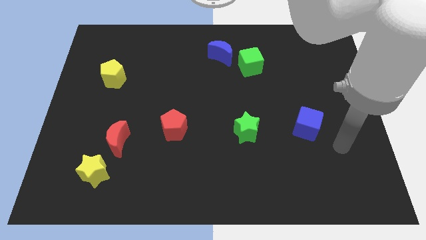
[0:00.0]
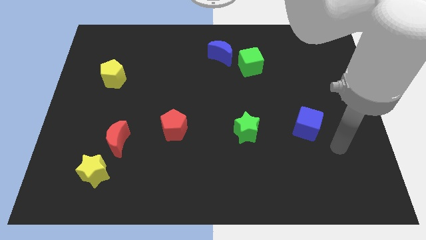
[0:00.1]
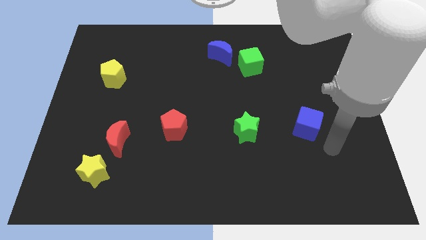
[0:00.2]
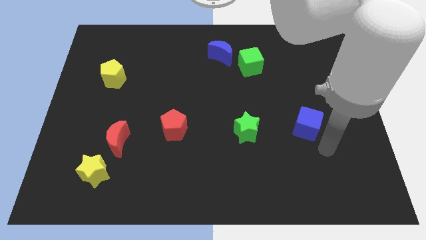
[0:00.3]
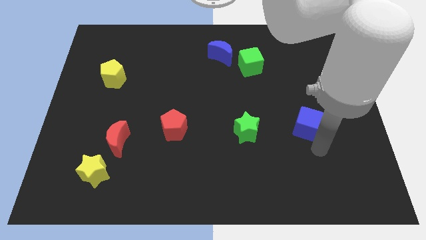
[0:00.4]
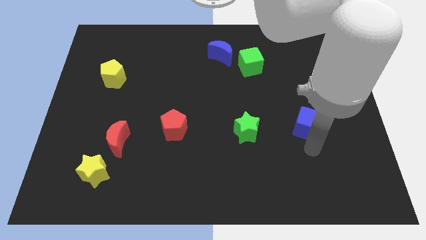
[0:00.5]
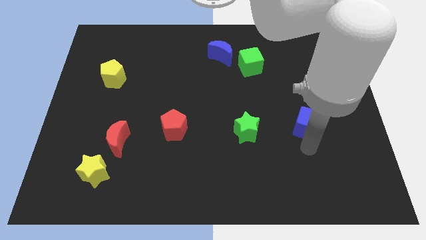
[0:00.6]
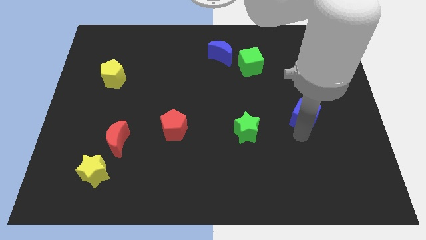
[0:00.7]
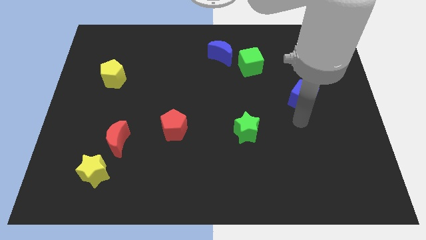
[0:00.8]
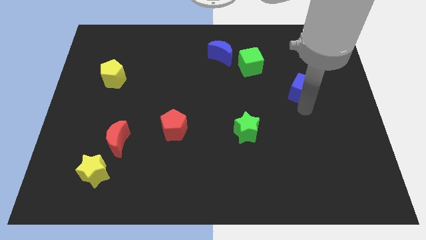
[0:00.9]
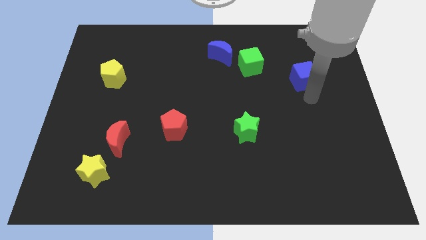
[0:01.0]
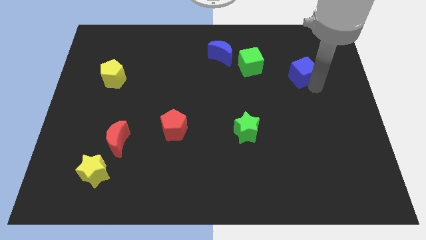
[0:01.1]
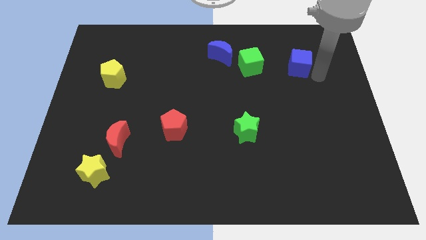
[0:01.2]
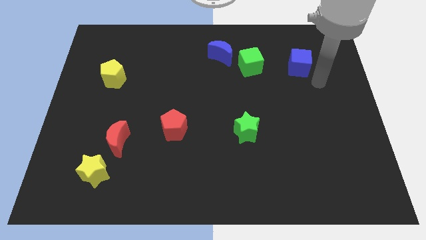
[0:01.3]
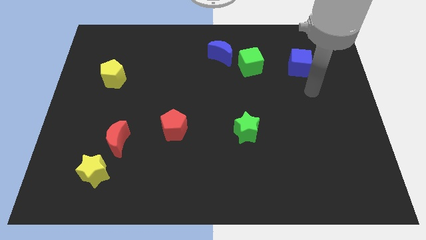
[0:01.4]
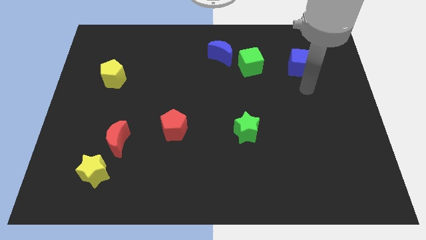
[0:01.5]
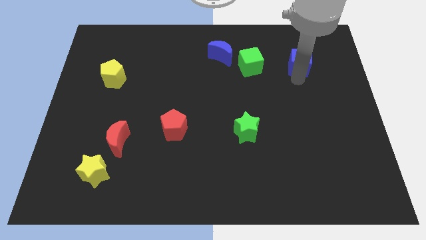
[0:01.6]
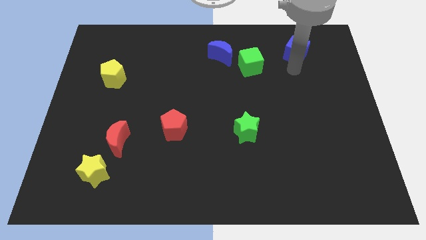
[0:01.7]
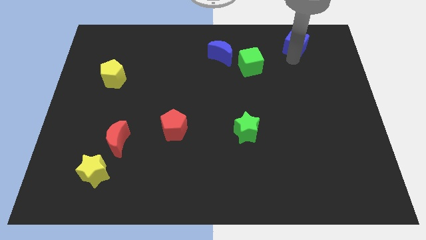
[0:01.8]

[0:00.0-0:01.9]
push the blue cube towards the top side

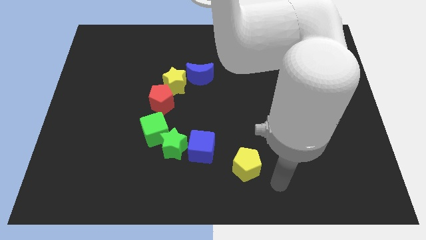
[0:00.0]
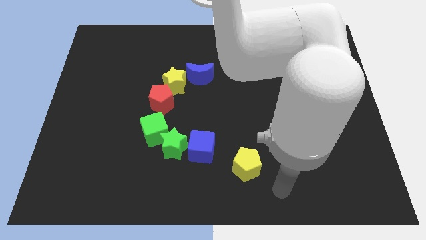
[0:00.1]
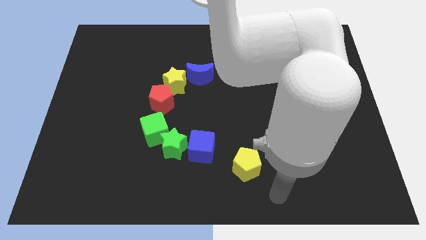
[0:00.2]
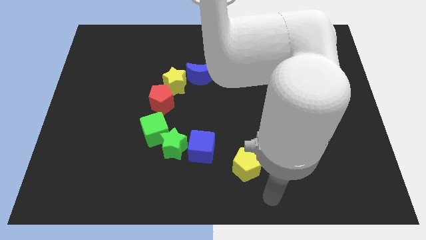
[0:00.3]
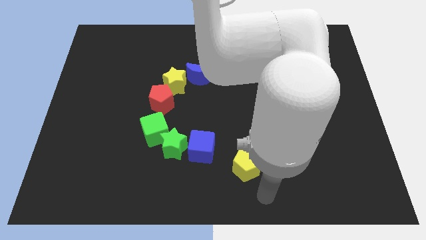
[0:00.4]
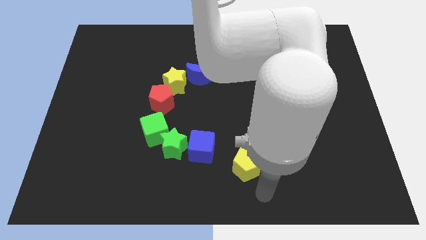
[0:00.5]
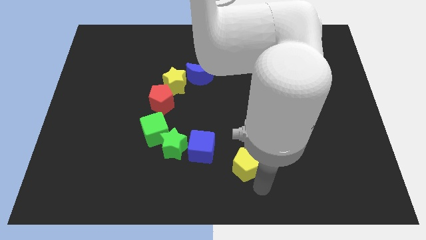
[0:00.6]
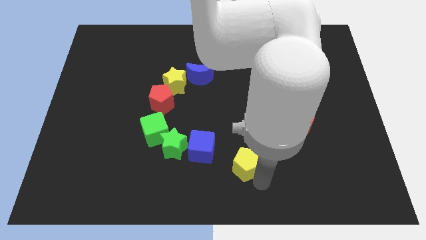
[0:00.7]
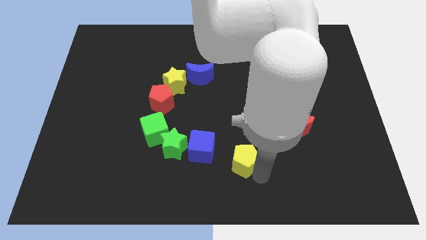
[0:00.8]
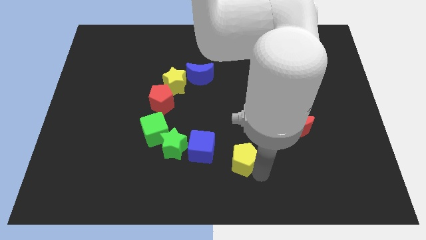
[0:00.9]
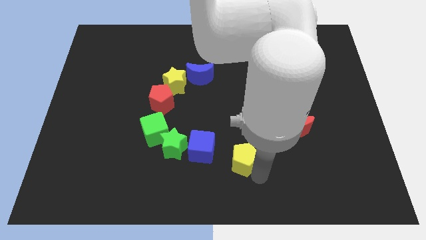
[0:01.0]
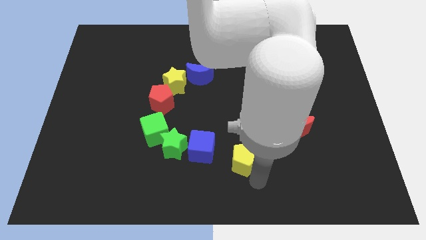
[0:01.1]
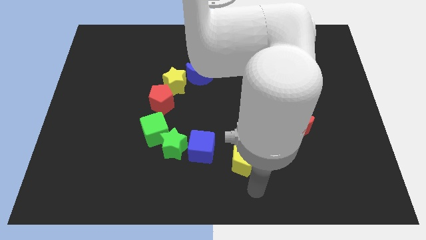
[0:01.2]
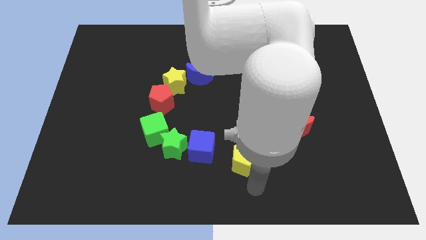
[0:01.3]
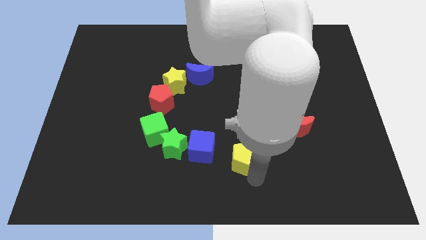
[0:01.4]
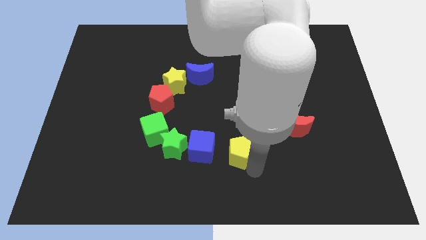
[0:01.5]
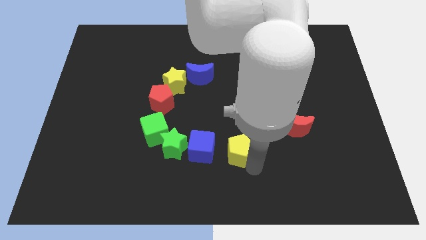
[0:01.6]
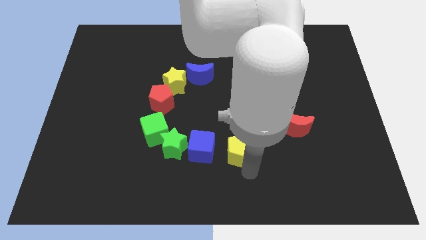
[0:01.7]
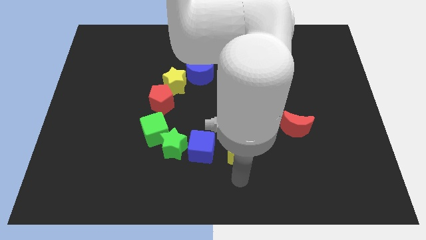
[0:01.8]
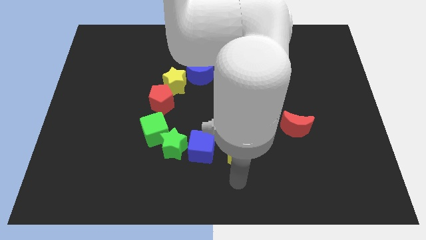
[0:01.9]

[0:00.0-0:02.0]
push the yellow pentagon to the right of the blue cube

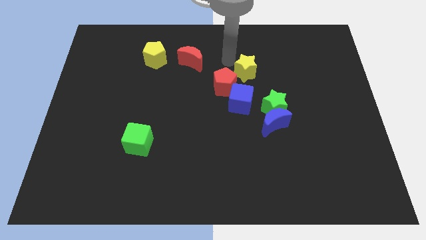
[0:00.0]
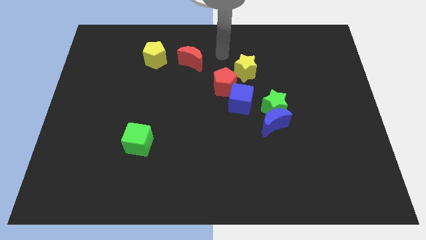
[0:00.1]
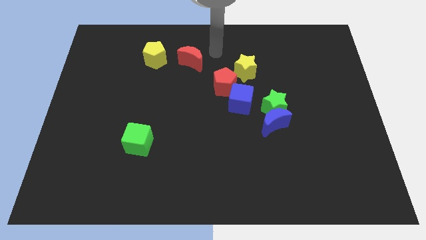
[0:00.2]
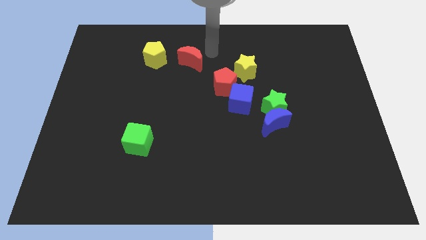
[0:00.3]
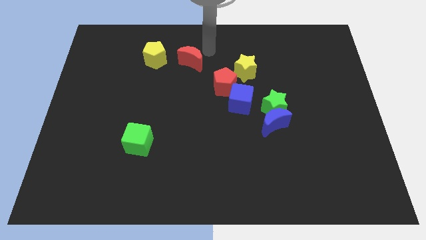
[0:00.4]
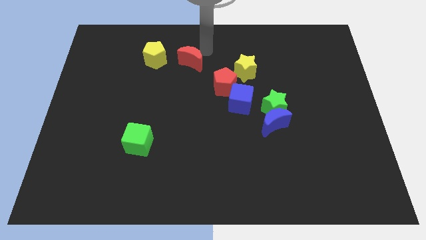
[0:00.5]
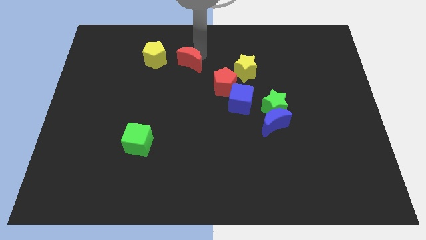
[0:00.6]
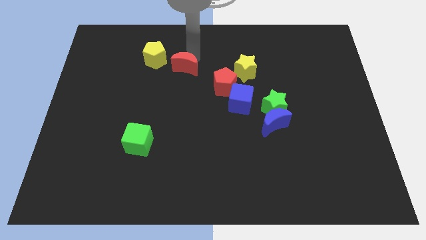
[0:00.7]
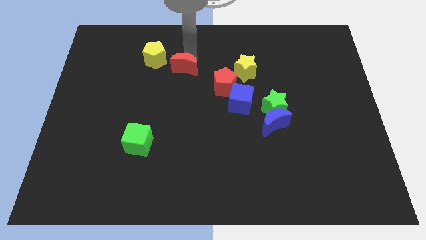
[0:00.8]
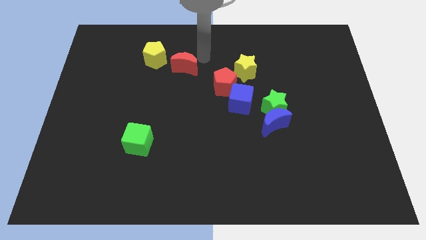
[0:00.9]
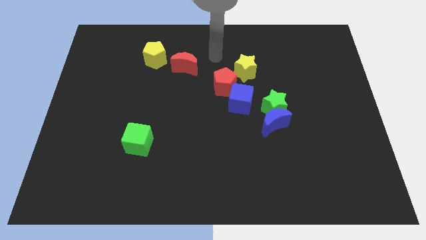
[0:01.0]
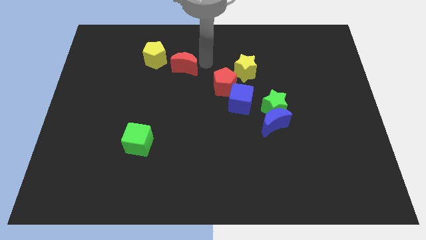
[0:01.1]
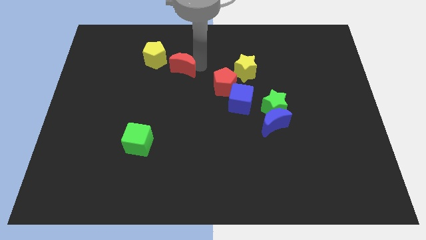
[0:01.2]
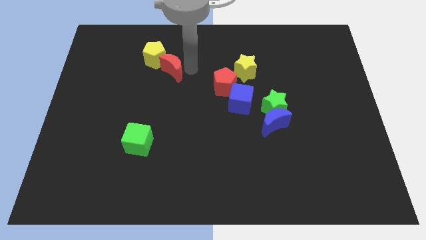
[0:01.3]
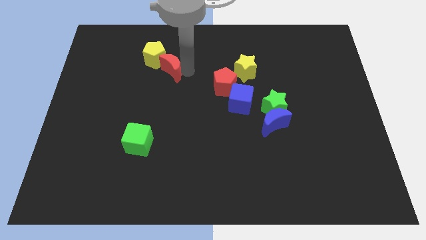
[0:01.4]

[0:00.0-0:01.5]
drag the red crescent to the bottom right of the yellow pentagon

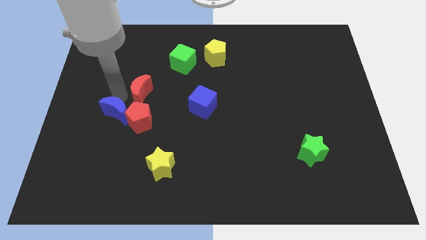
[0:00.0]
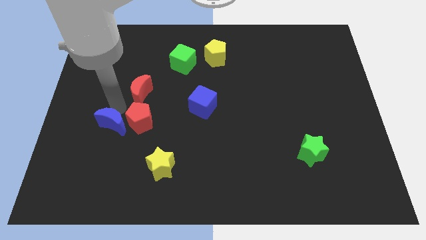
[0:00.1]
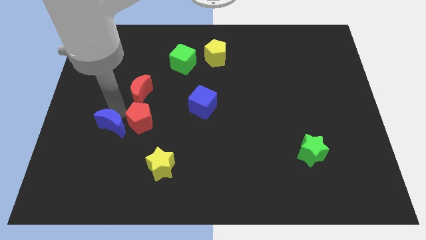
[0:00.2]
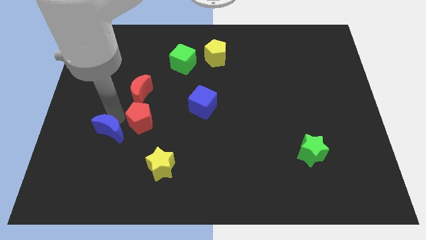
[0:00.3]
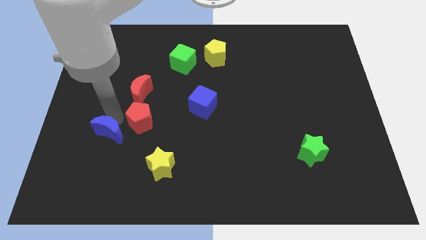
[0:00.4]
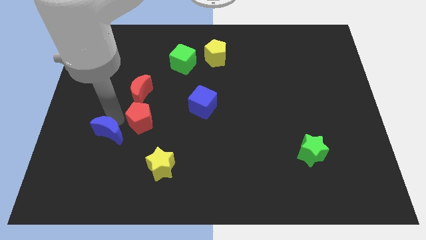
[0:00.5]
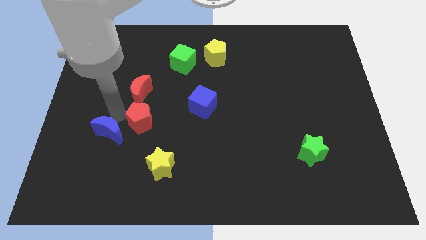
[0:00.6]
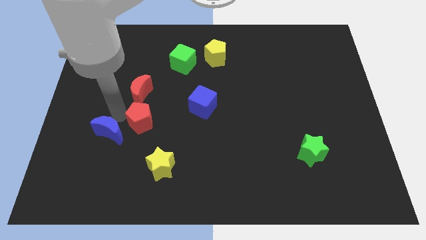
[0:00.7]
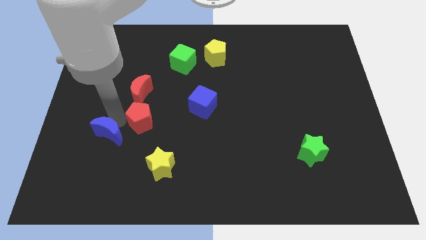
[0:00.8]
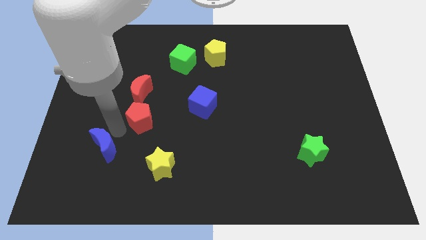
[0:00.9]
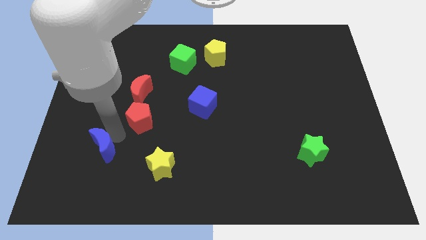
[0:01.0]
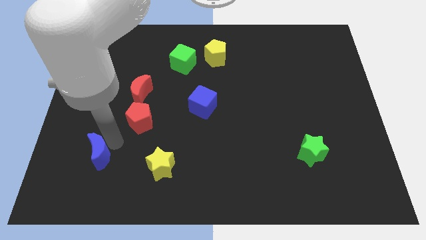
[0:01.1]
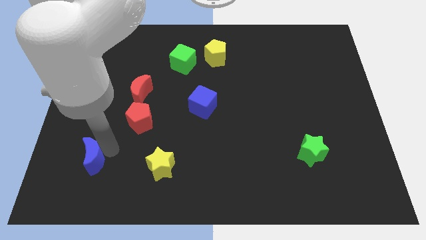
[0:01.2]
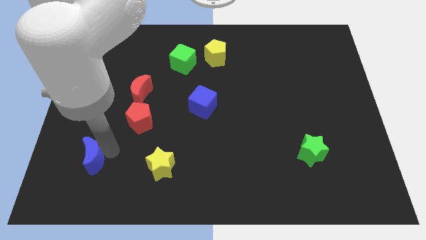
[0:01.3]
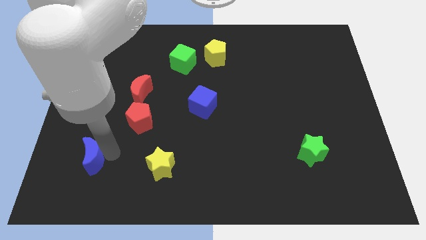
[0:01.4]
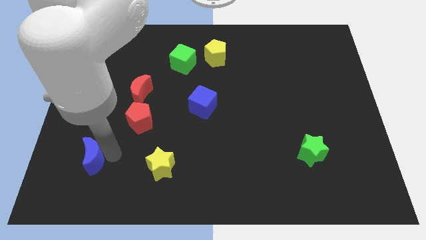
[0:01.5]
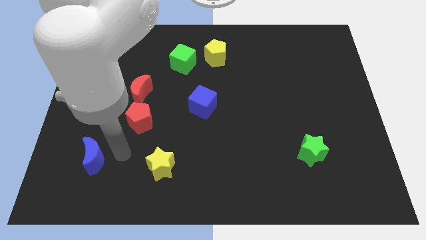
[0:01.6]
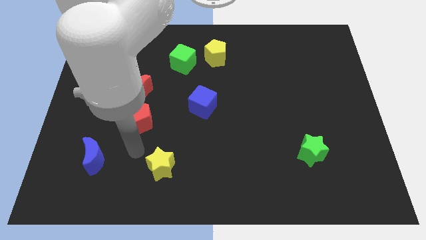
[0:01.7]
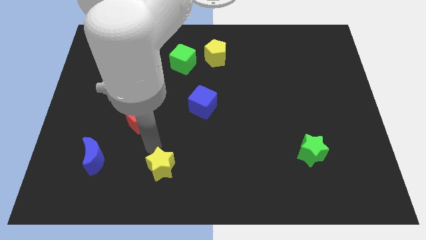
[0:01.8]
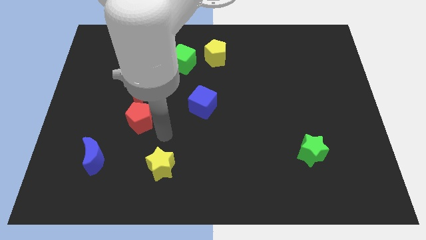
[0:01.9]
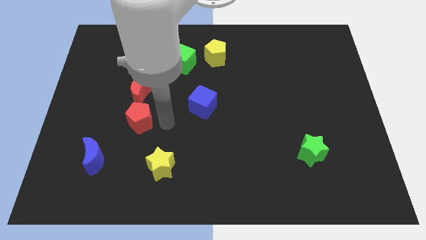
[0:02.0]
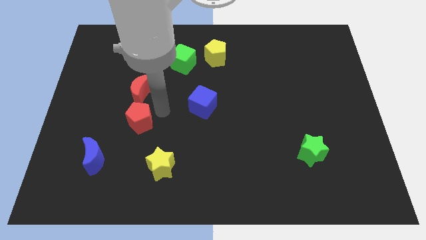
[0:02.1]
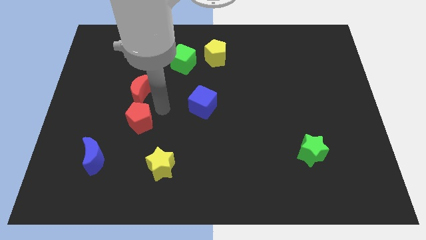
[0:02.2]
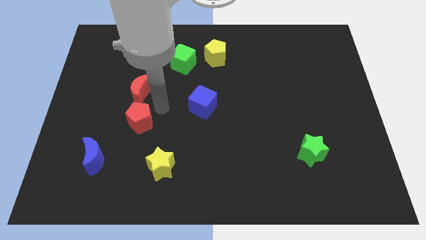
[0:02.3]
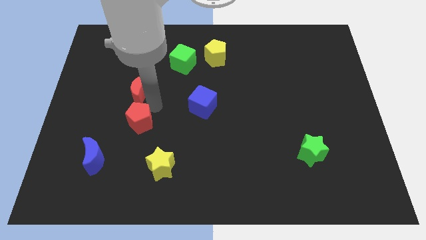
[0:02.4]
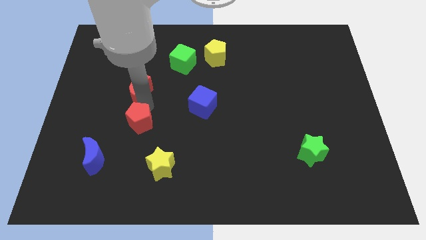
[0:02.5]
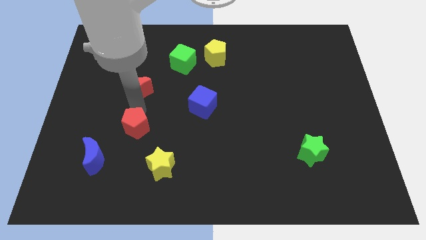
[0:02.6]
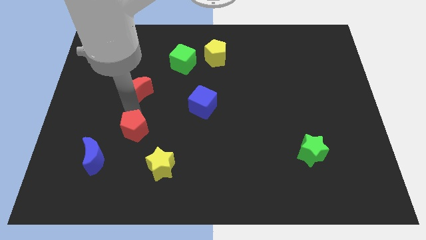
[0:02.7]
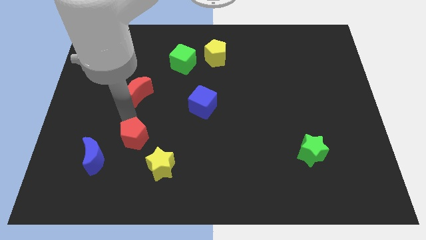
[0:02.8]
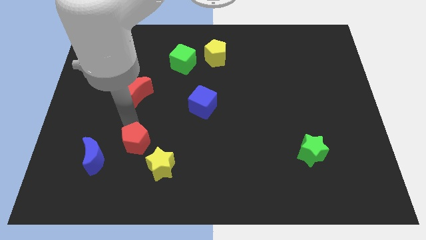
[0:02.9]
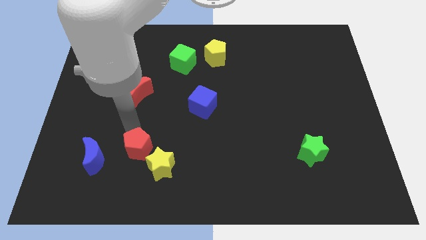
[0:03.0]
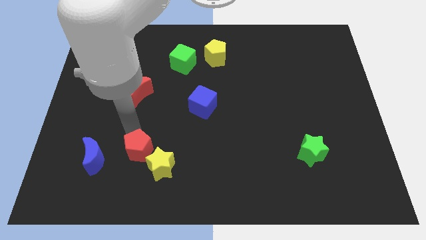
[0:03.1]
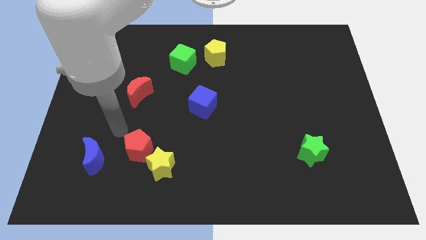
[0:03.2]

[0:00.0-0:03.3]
place the red pentagon down to the red crescent

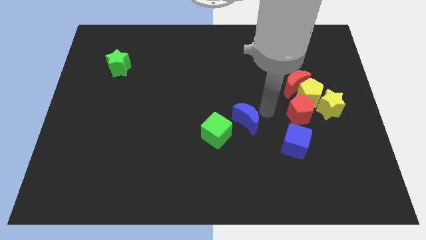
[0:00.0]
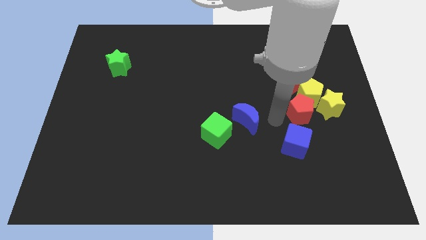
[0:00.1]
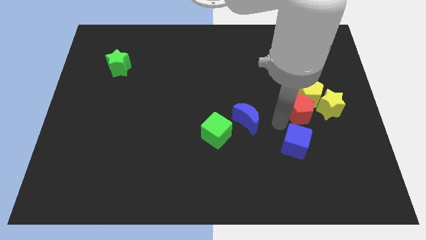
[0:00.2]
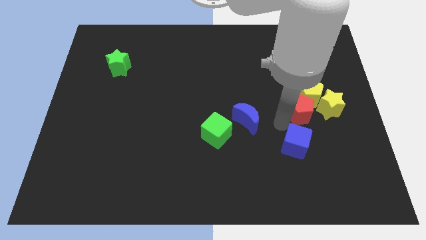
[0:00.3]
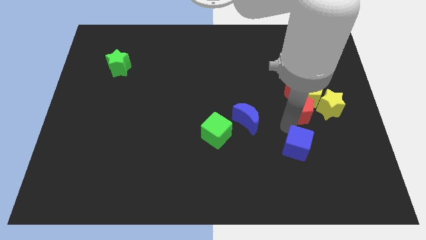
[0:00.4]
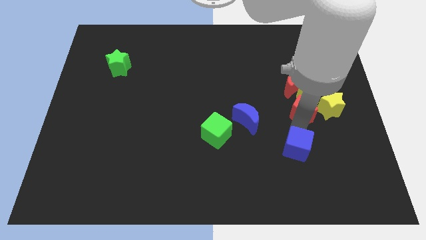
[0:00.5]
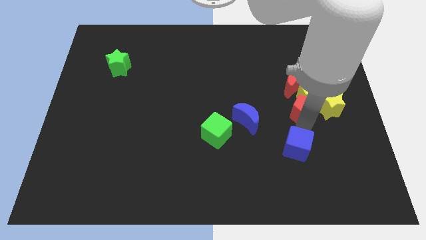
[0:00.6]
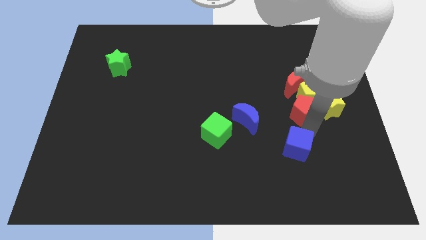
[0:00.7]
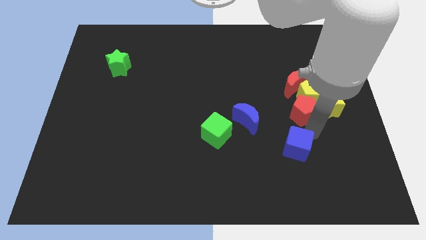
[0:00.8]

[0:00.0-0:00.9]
point your arm between red pentagon and blue cube
